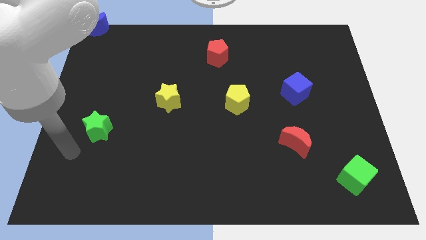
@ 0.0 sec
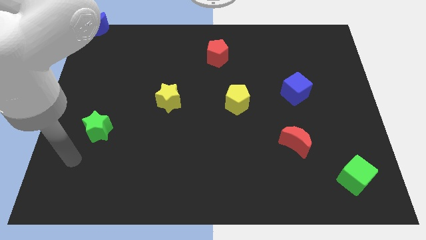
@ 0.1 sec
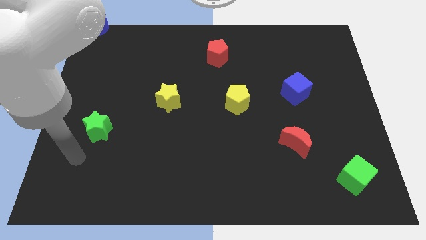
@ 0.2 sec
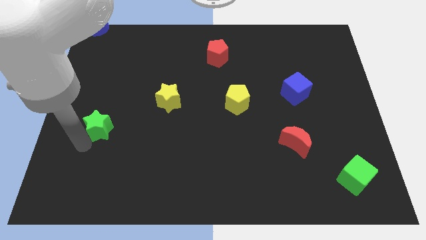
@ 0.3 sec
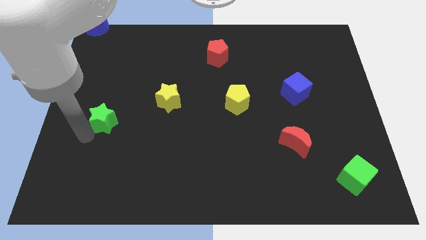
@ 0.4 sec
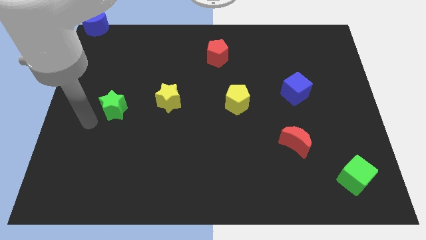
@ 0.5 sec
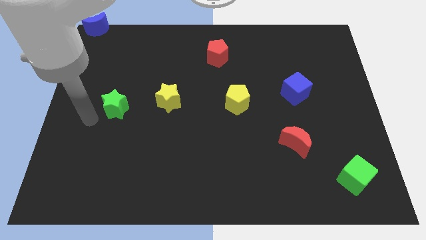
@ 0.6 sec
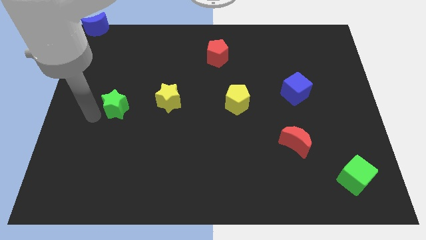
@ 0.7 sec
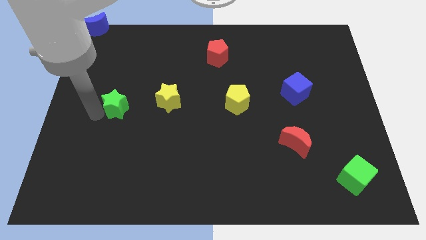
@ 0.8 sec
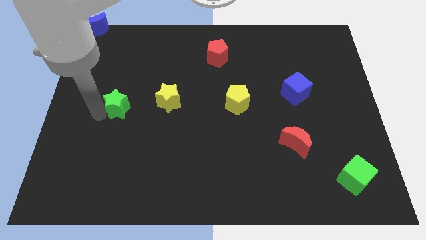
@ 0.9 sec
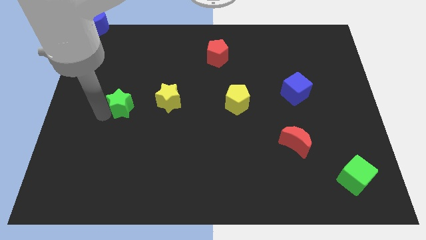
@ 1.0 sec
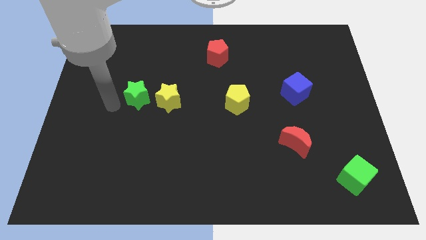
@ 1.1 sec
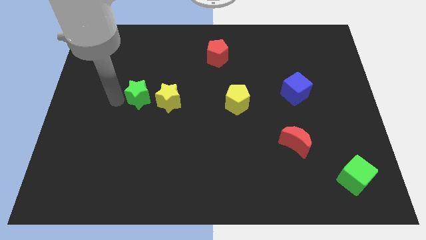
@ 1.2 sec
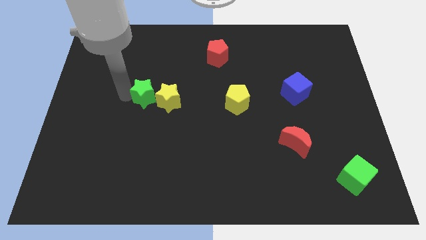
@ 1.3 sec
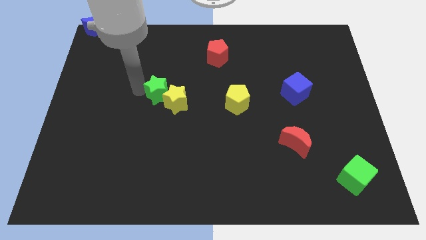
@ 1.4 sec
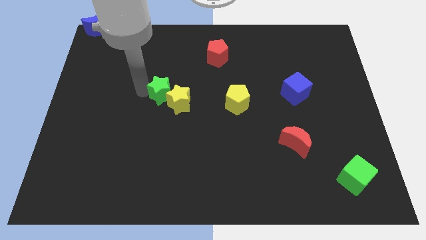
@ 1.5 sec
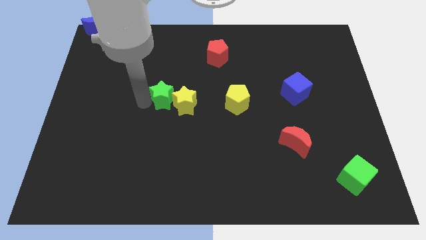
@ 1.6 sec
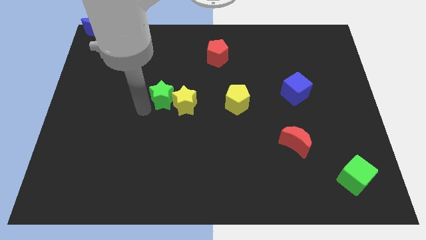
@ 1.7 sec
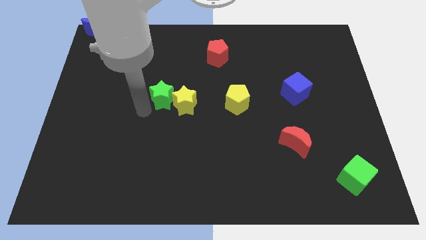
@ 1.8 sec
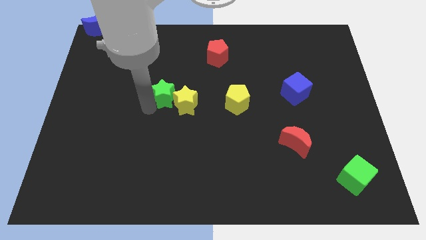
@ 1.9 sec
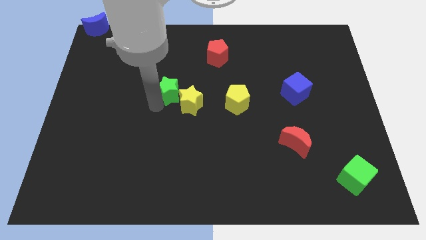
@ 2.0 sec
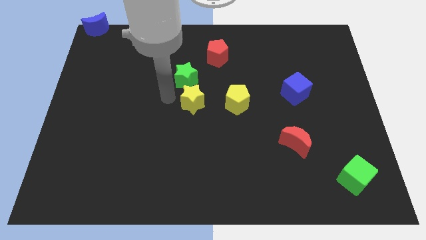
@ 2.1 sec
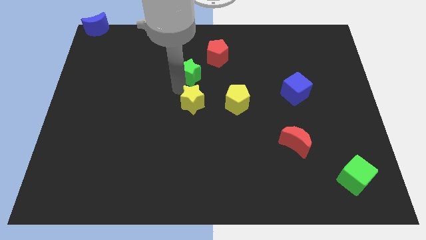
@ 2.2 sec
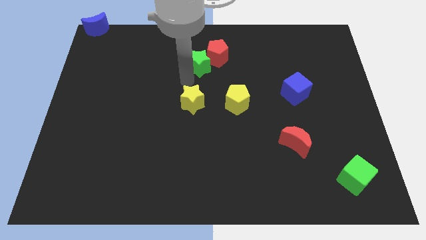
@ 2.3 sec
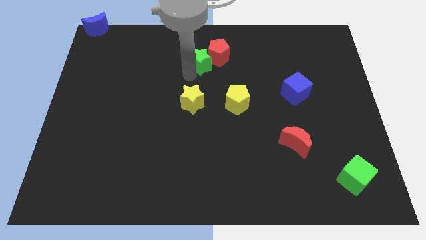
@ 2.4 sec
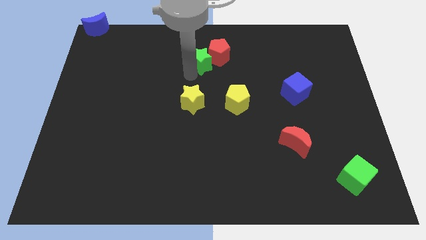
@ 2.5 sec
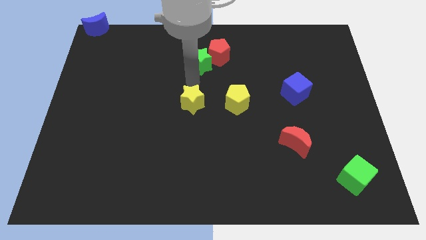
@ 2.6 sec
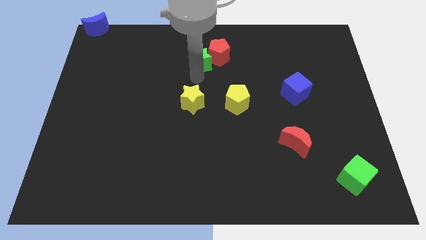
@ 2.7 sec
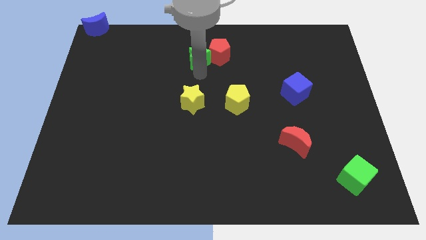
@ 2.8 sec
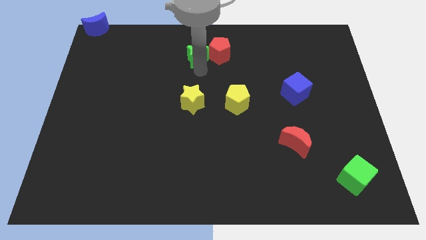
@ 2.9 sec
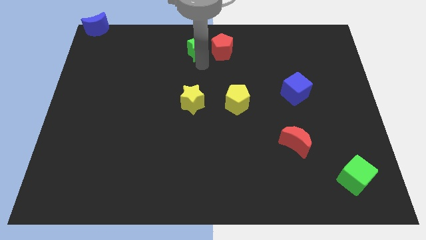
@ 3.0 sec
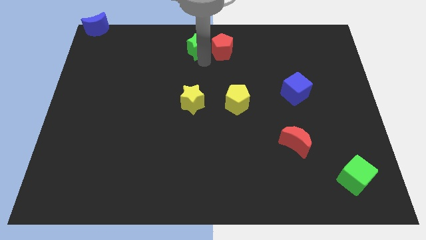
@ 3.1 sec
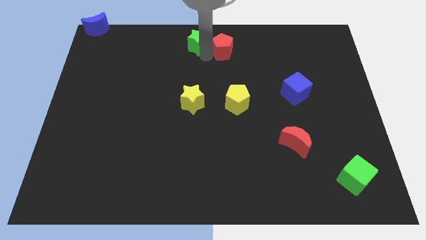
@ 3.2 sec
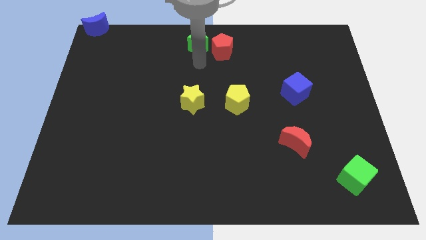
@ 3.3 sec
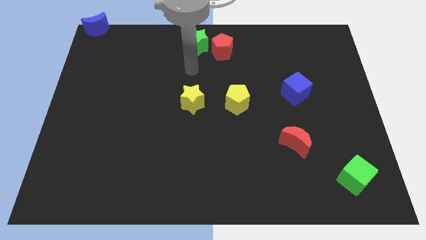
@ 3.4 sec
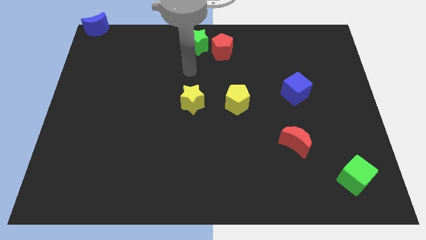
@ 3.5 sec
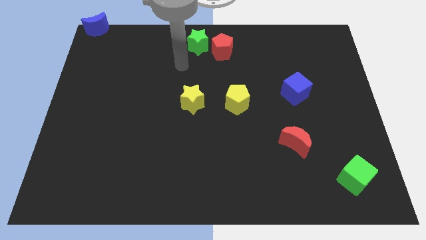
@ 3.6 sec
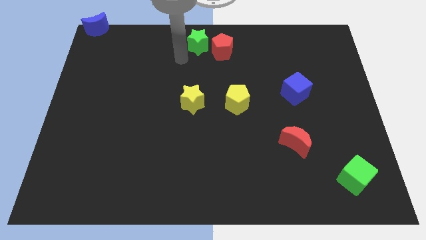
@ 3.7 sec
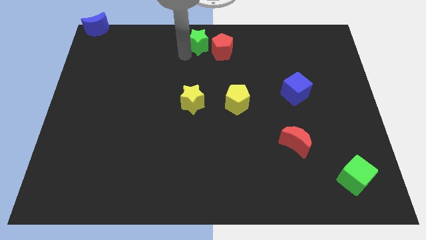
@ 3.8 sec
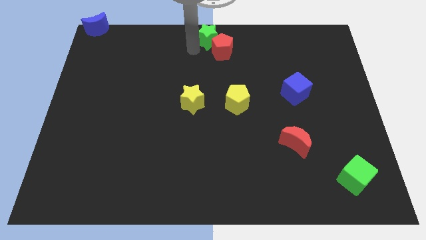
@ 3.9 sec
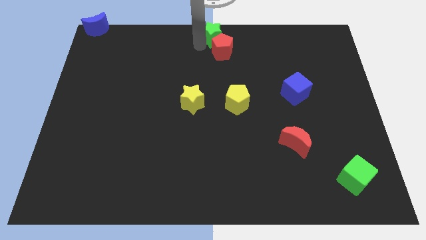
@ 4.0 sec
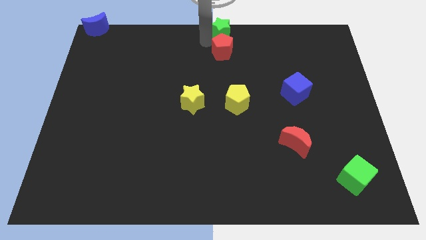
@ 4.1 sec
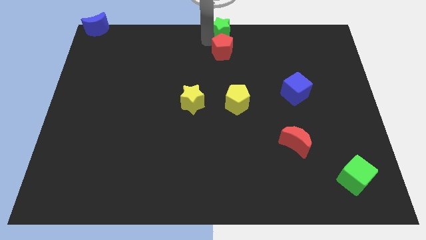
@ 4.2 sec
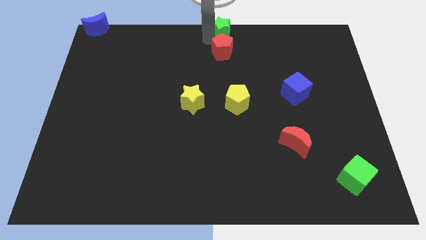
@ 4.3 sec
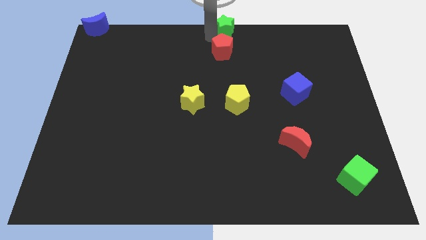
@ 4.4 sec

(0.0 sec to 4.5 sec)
push the green star on top of the red pentagon

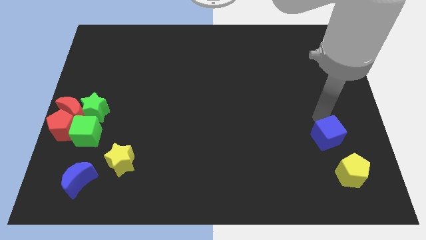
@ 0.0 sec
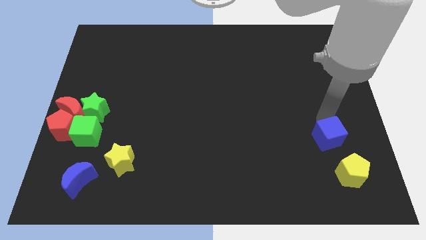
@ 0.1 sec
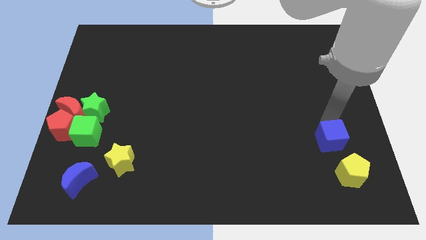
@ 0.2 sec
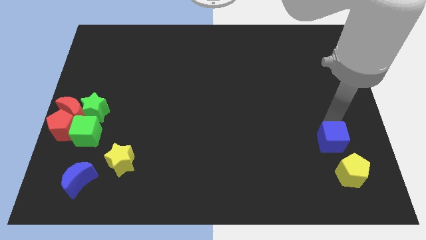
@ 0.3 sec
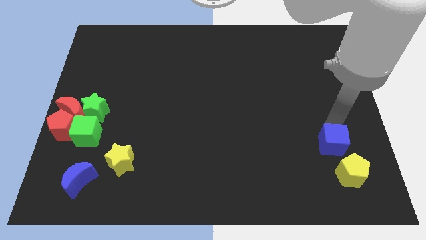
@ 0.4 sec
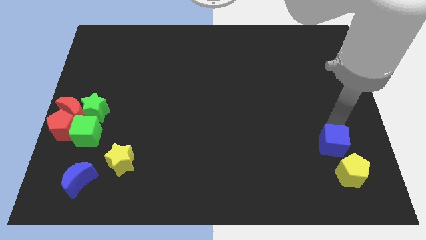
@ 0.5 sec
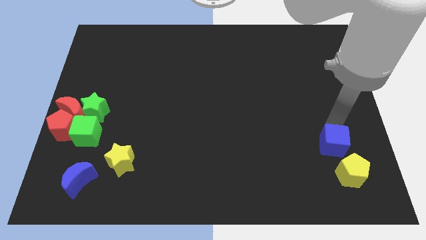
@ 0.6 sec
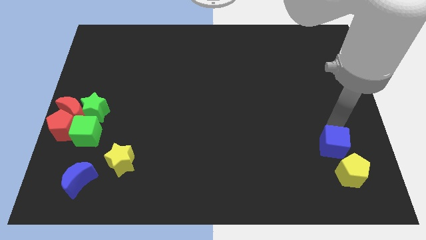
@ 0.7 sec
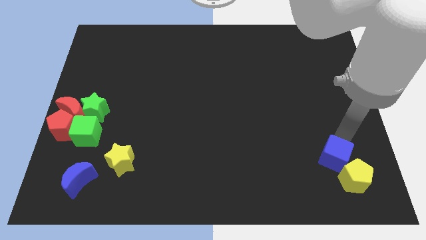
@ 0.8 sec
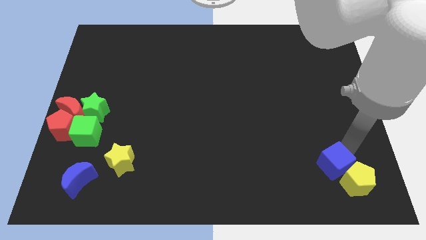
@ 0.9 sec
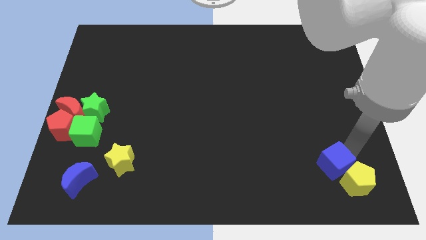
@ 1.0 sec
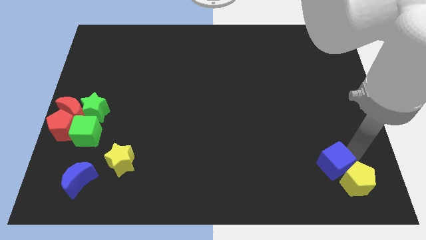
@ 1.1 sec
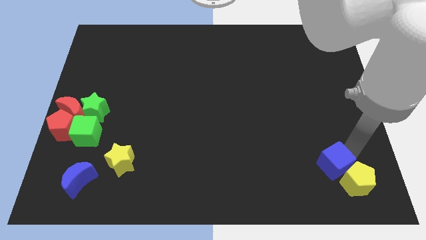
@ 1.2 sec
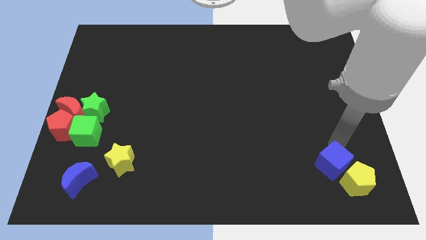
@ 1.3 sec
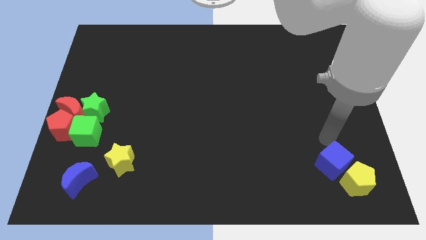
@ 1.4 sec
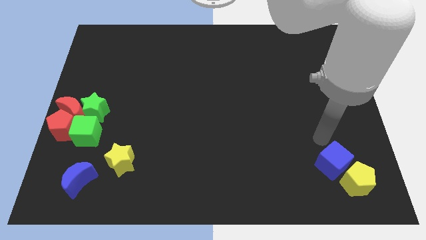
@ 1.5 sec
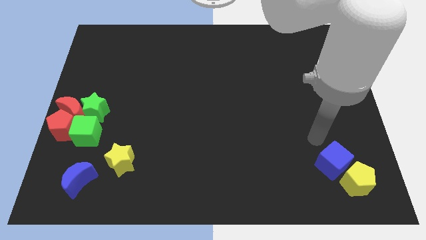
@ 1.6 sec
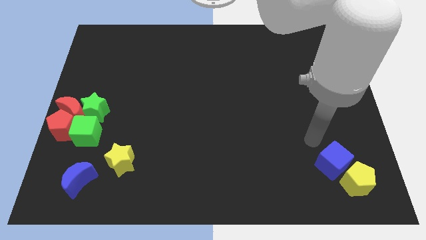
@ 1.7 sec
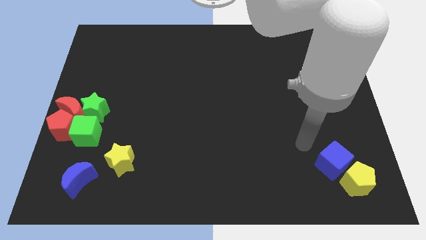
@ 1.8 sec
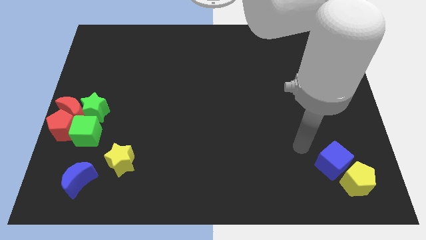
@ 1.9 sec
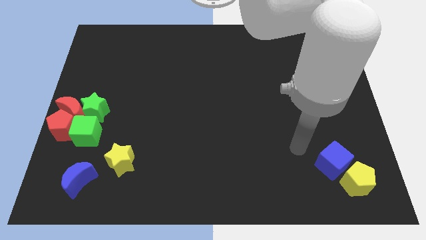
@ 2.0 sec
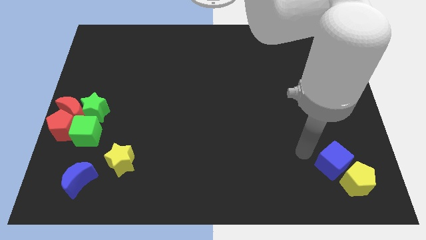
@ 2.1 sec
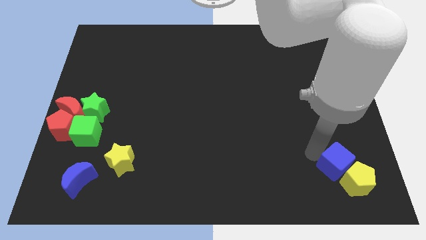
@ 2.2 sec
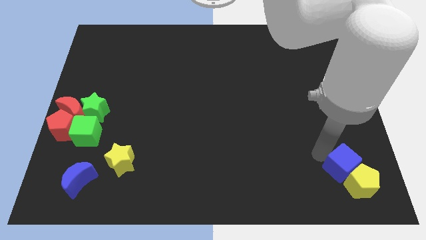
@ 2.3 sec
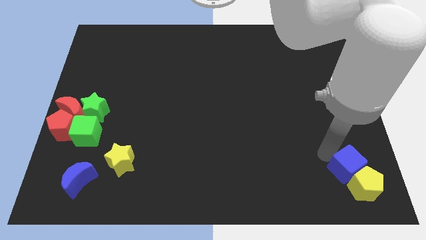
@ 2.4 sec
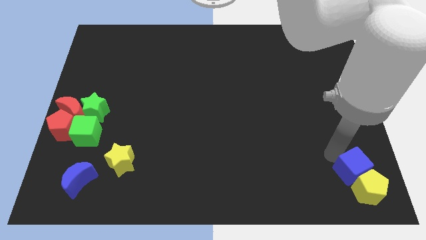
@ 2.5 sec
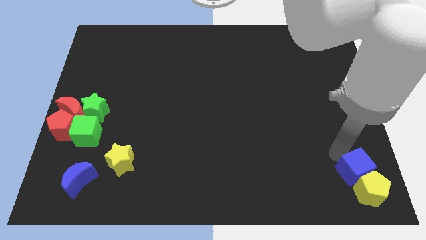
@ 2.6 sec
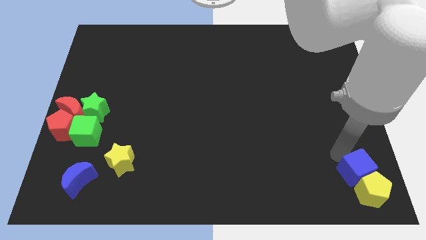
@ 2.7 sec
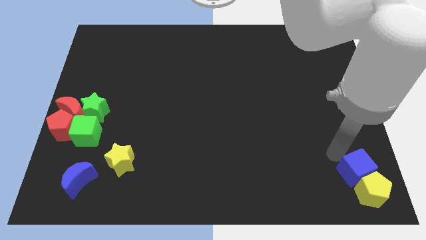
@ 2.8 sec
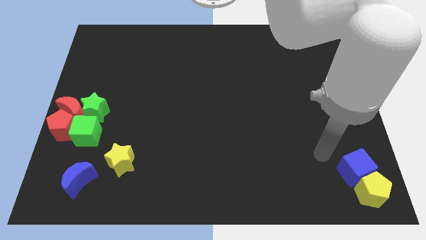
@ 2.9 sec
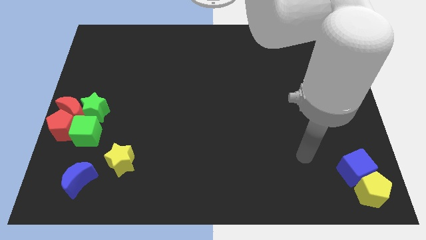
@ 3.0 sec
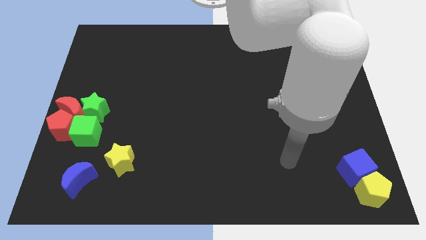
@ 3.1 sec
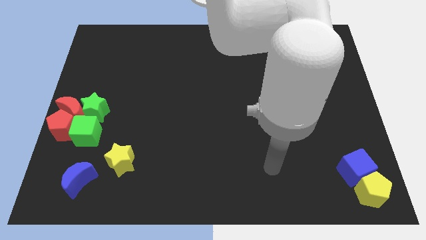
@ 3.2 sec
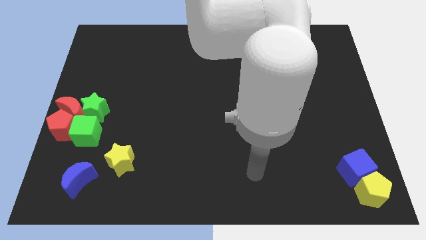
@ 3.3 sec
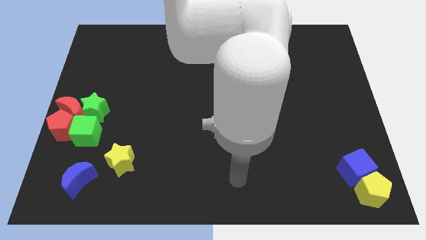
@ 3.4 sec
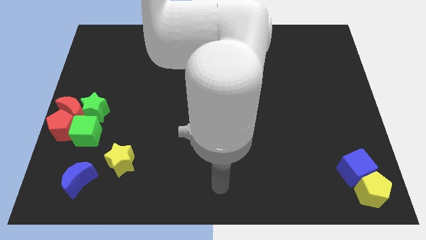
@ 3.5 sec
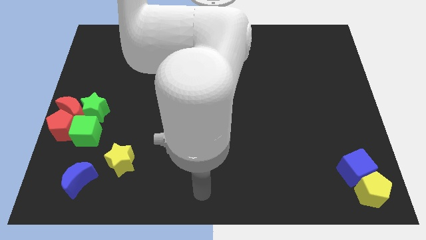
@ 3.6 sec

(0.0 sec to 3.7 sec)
drag blue cube and the yellow pentagon to the bottom right corner

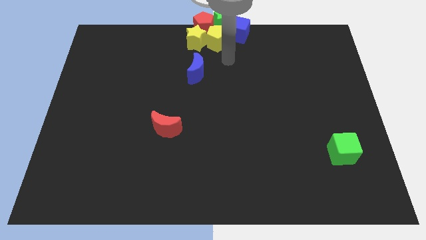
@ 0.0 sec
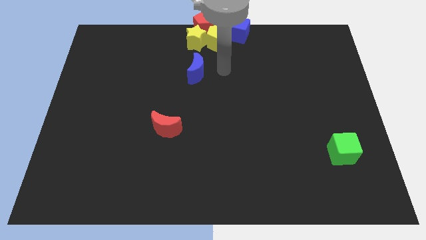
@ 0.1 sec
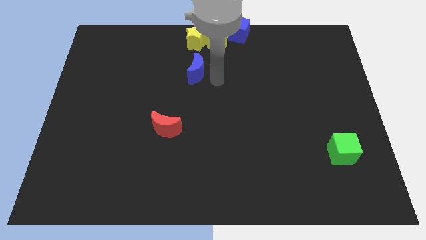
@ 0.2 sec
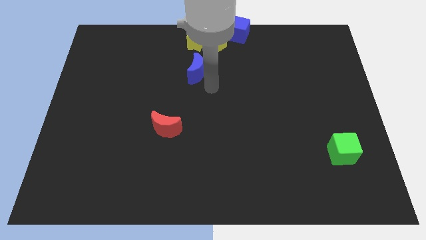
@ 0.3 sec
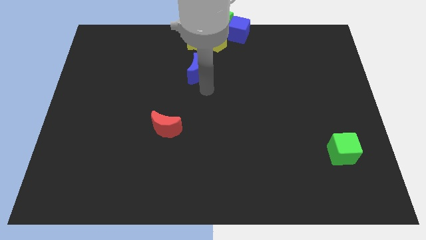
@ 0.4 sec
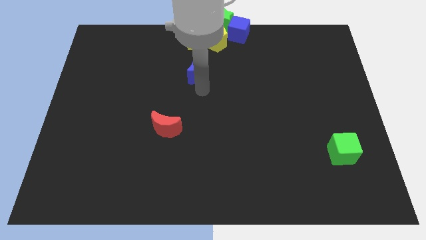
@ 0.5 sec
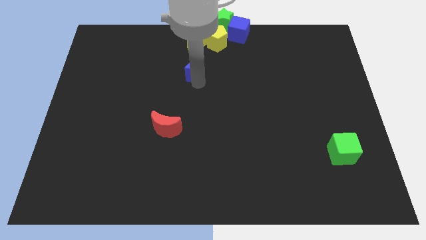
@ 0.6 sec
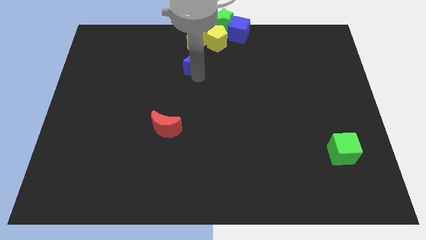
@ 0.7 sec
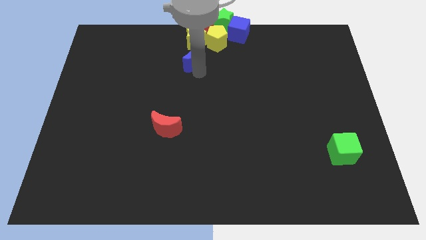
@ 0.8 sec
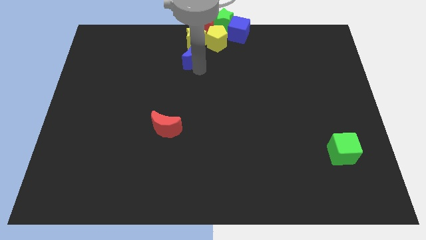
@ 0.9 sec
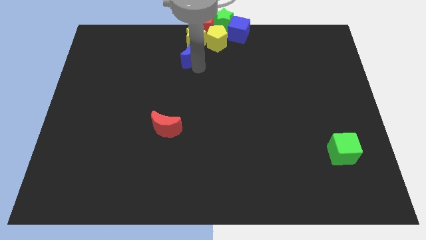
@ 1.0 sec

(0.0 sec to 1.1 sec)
push the blue crescent to the bottom of the yellow star
